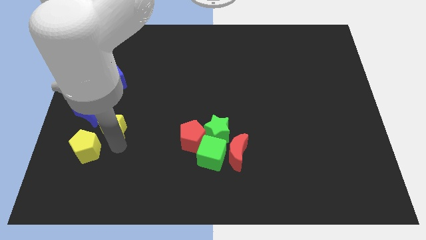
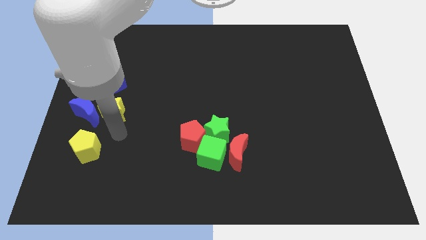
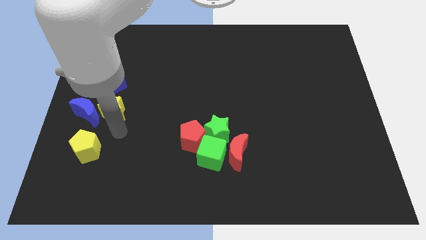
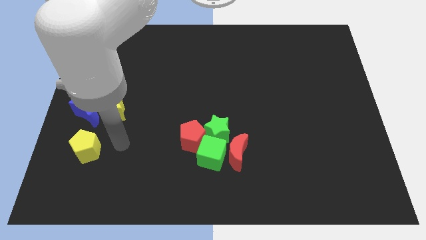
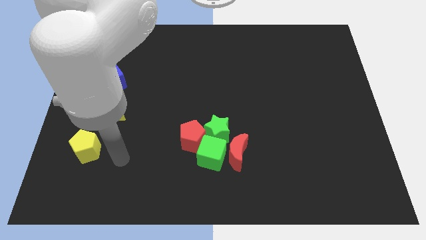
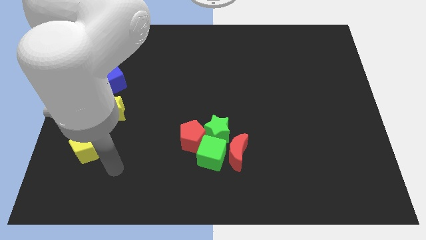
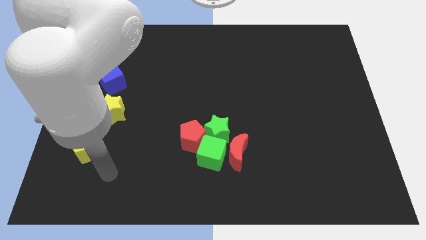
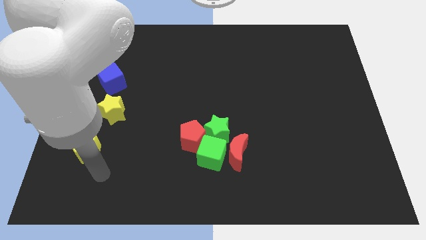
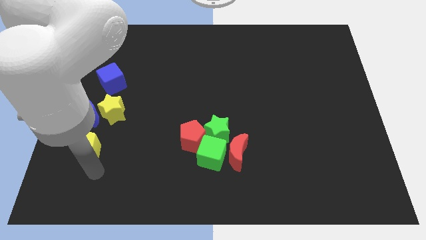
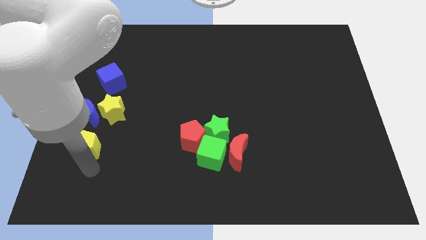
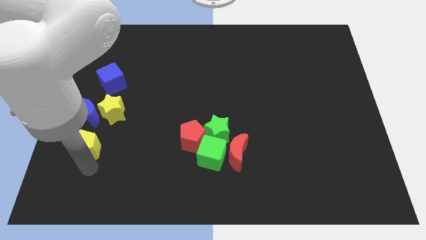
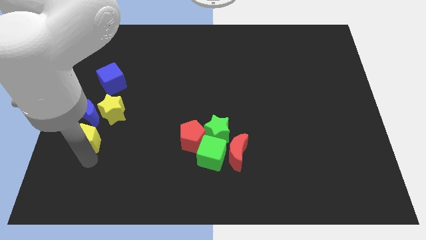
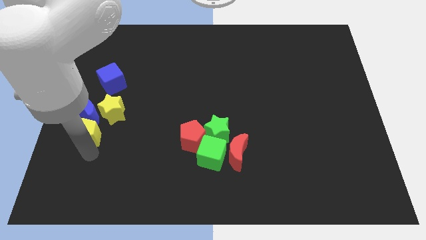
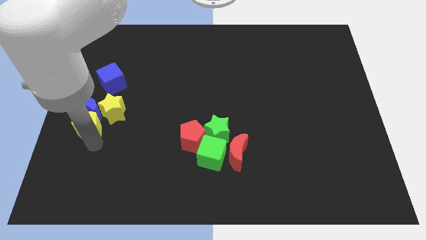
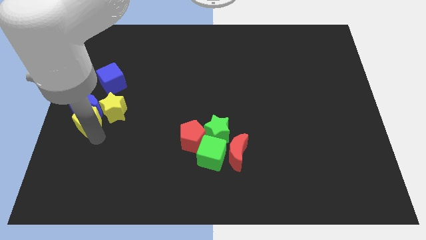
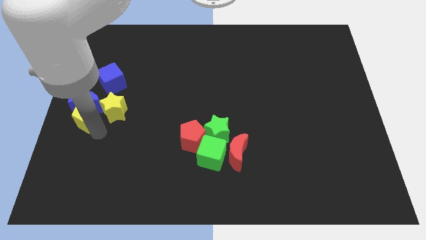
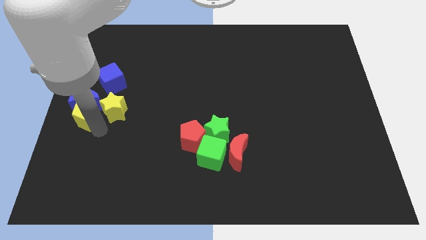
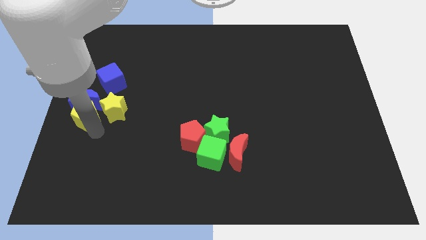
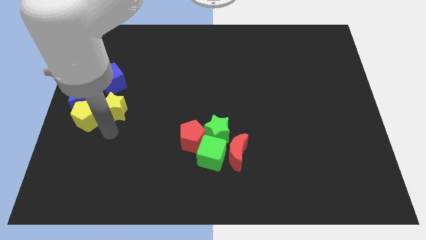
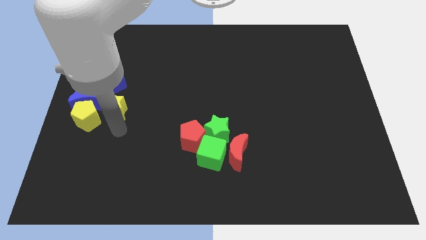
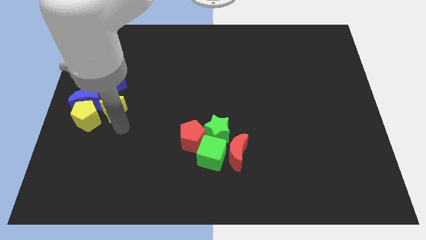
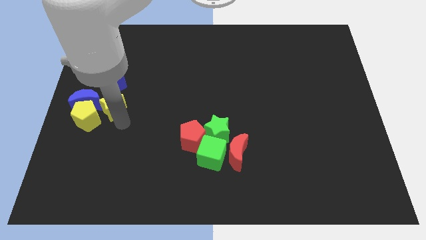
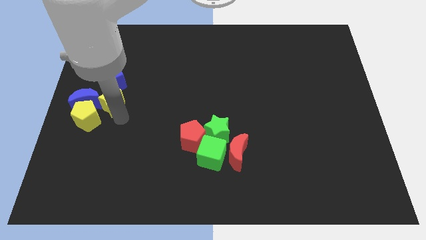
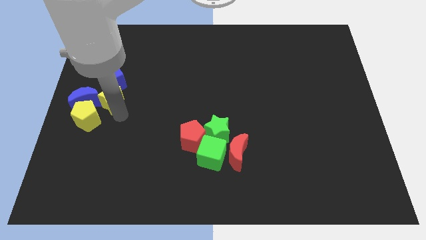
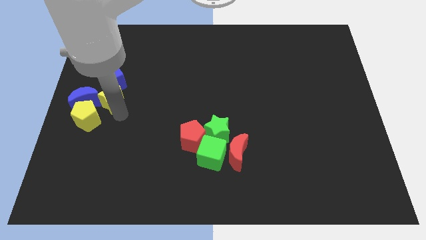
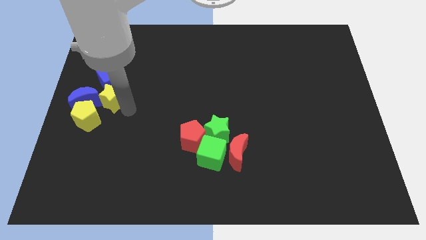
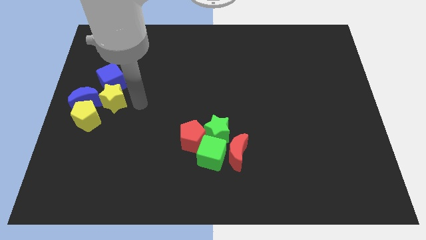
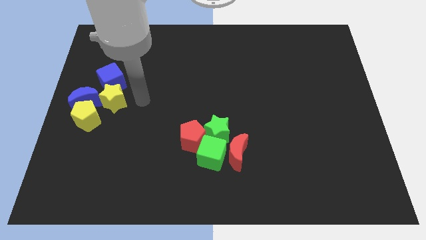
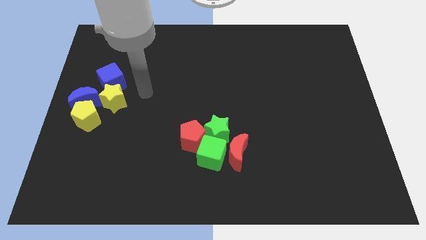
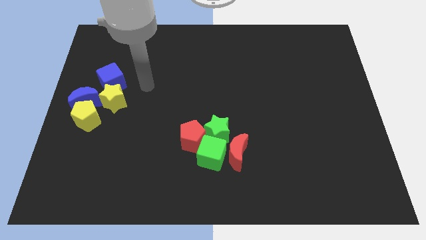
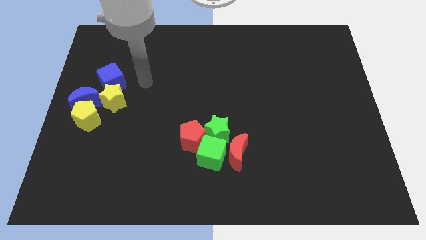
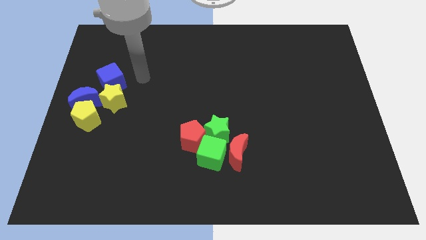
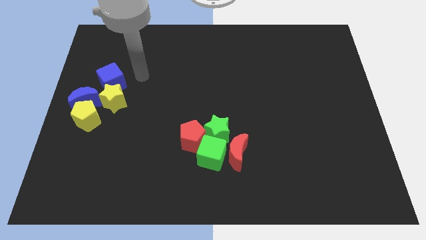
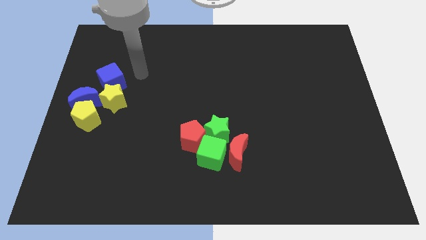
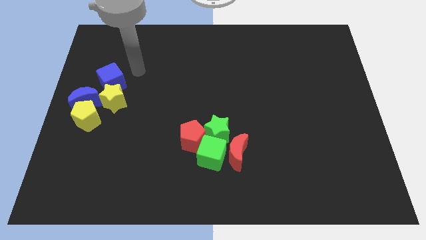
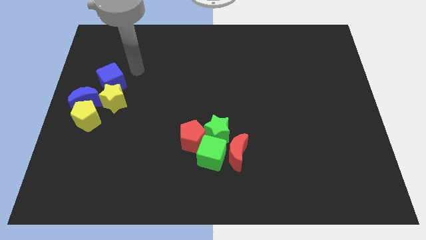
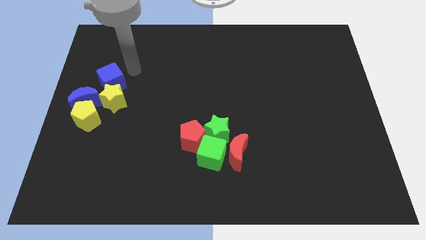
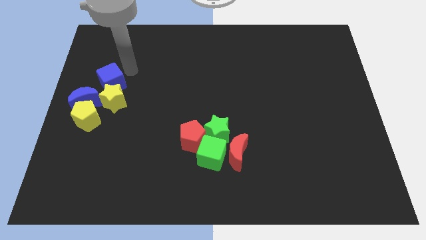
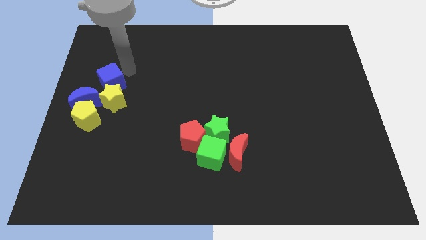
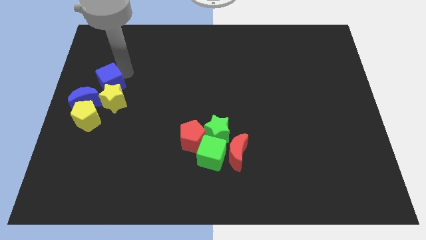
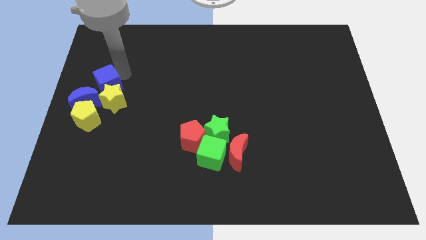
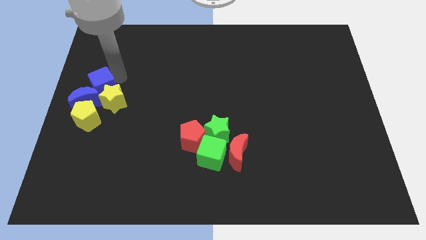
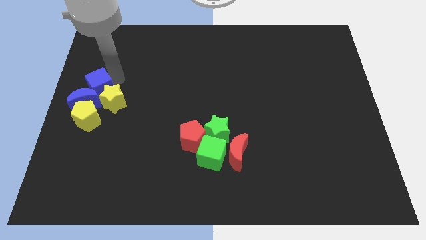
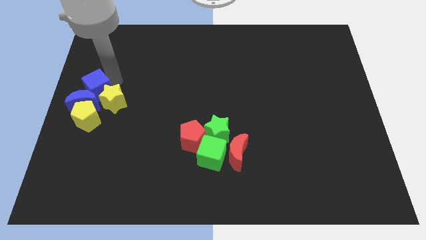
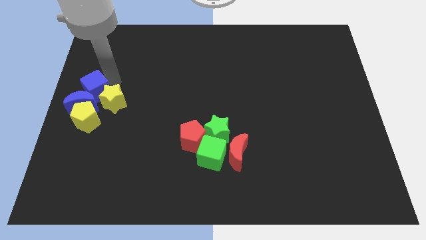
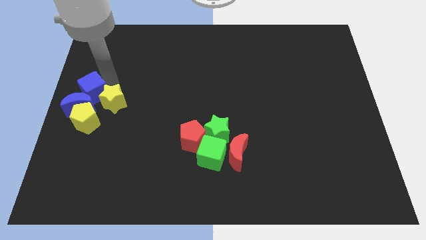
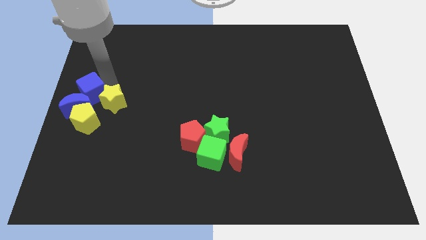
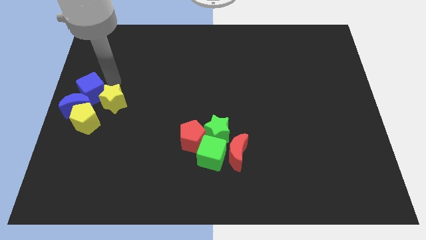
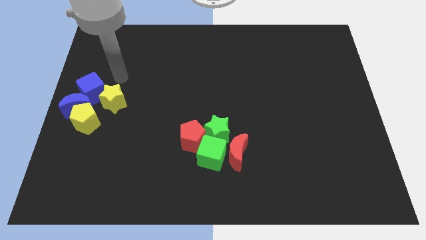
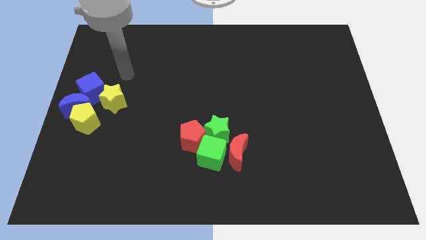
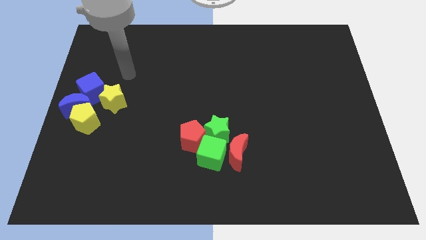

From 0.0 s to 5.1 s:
make a group of yellow and blue blocks

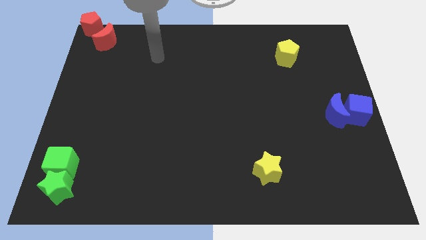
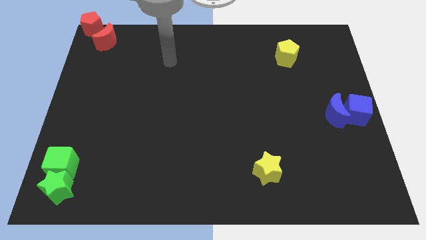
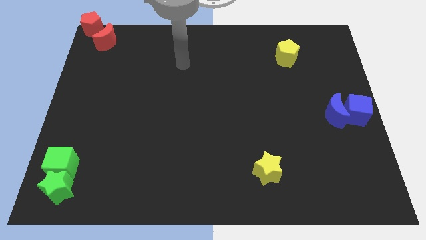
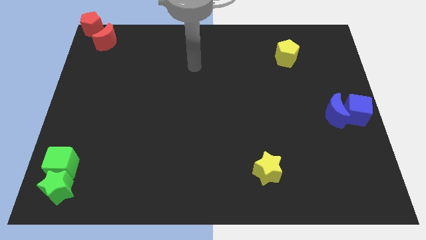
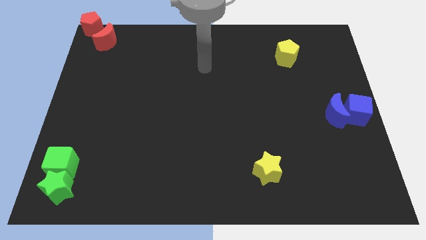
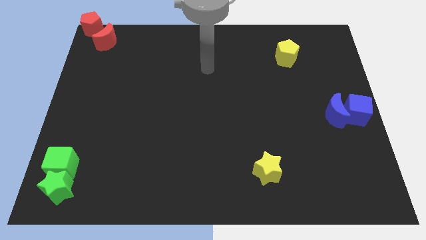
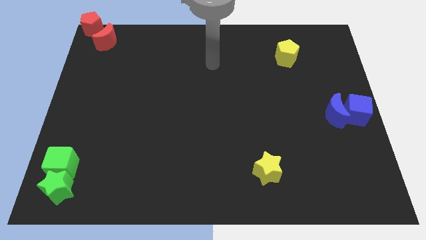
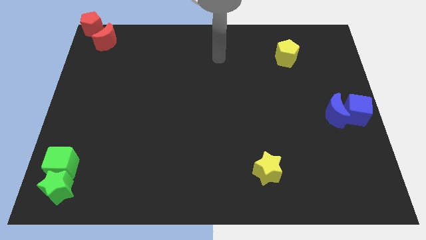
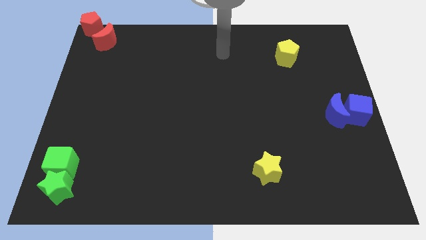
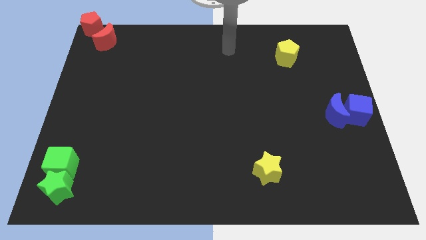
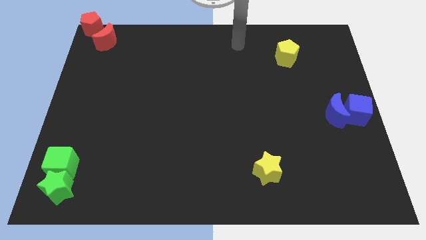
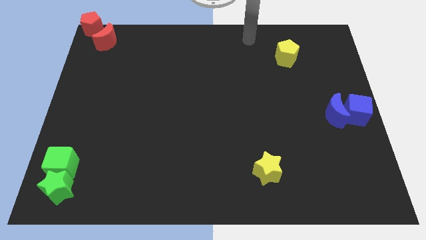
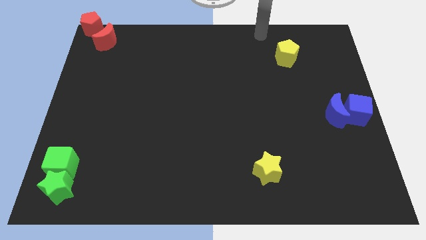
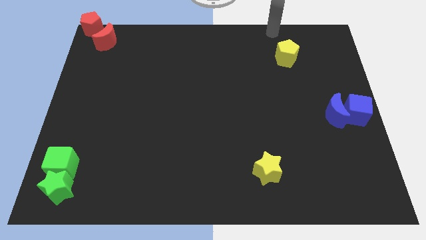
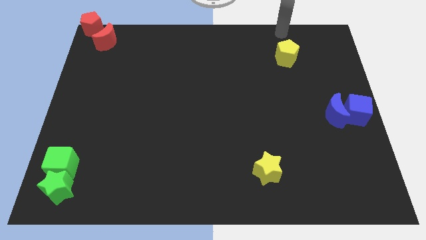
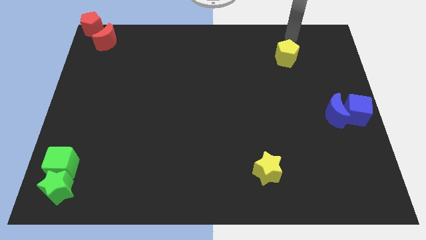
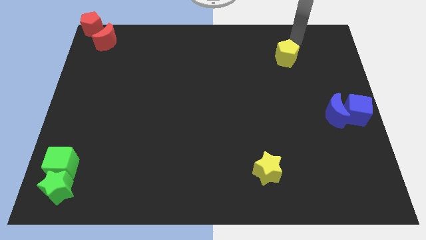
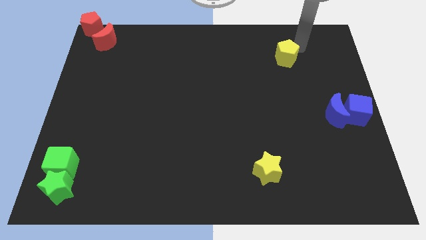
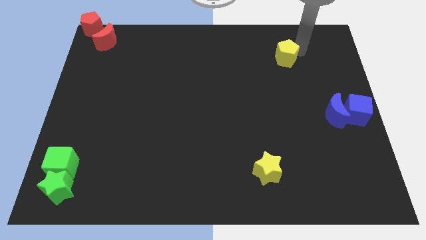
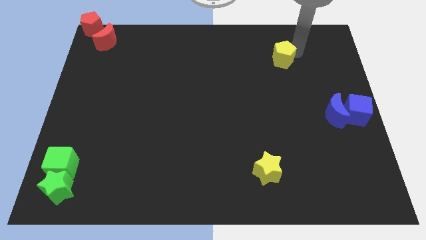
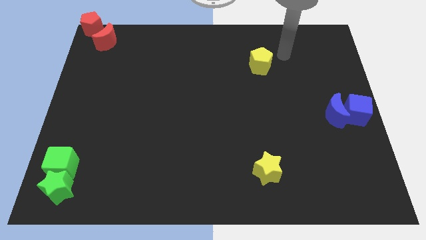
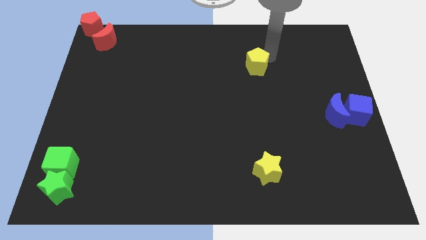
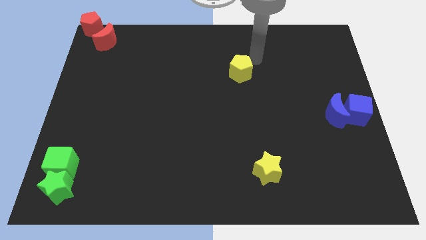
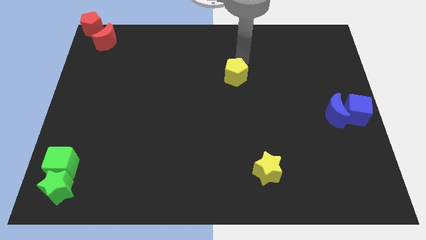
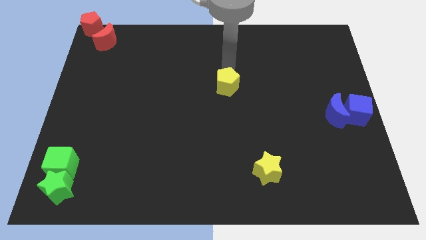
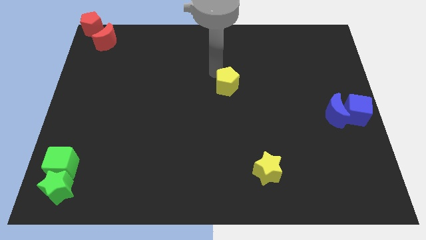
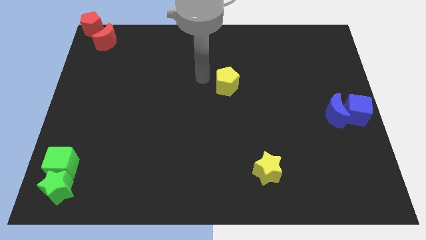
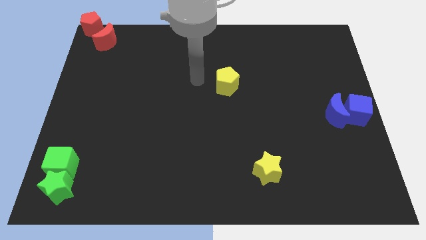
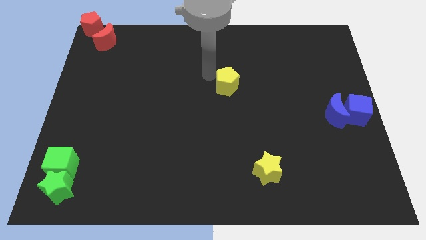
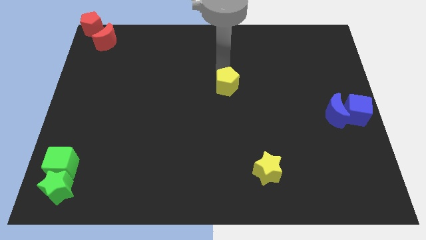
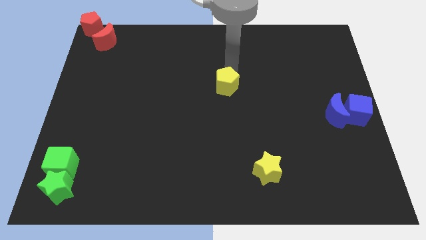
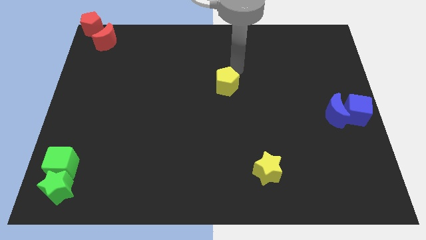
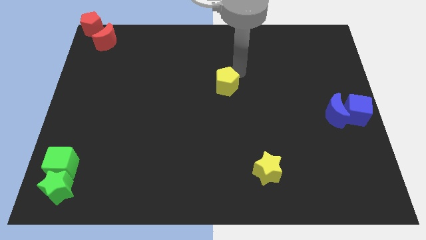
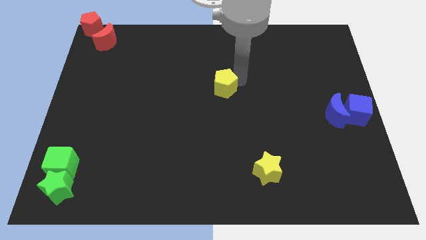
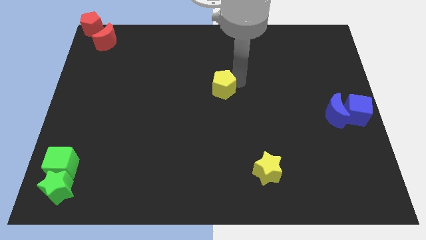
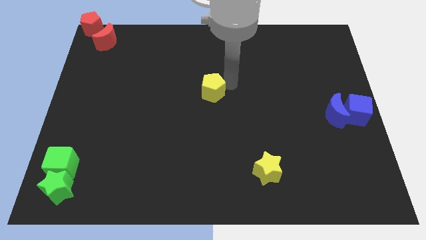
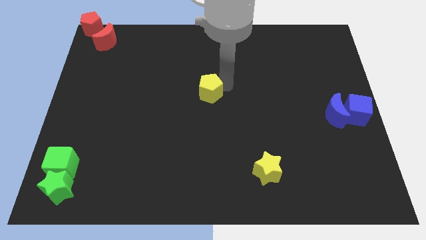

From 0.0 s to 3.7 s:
place the yellow pentagon at the center of the board

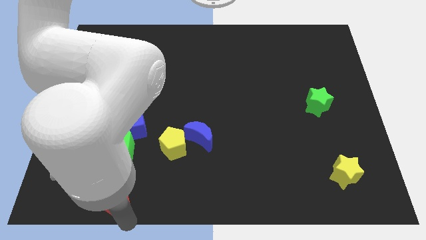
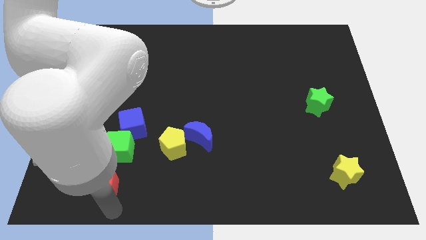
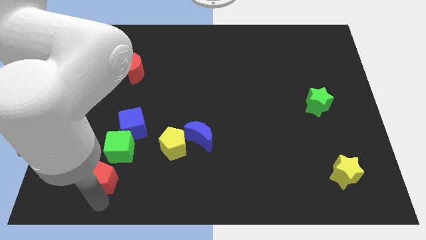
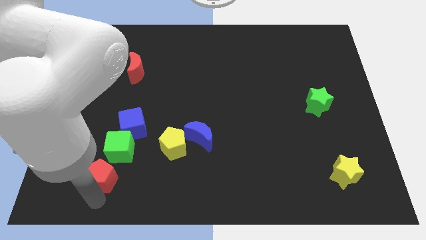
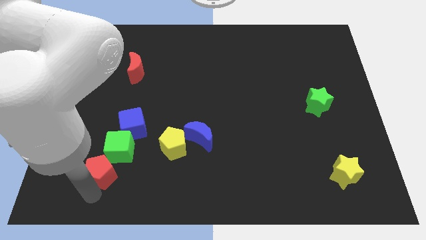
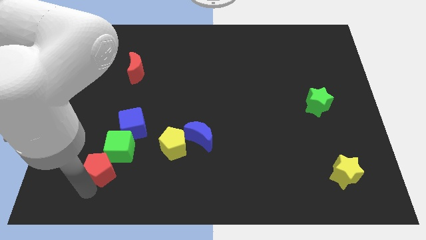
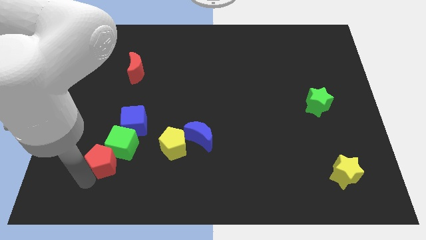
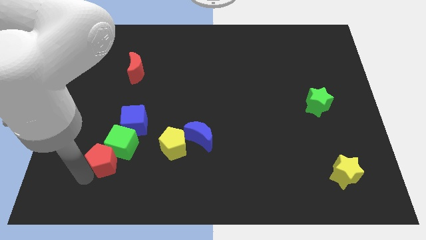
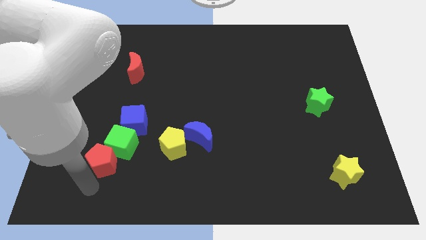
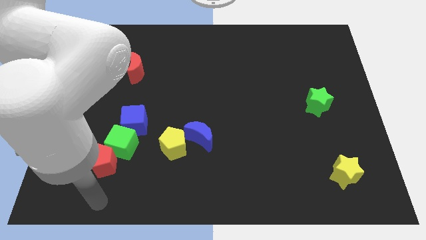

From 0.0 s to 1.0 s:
push the red pentagon into the green cube
